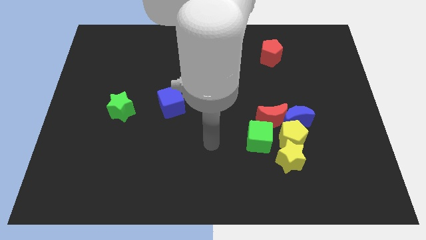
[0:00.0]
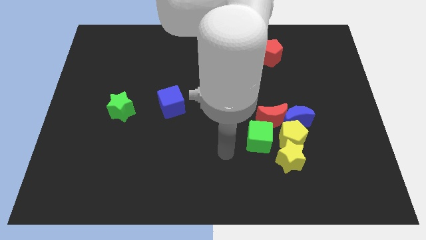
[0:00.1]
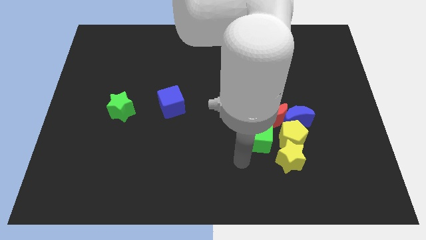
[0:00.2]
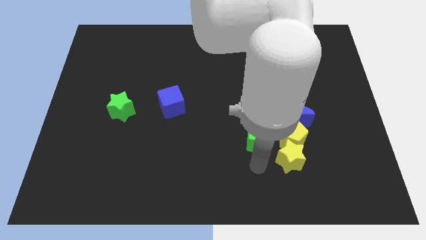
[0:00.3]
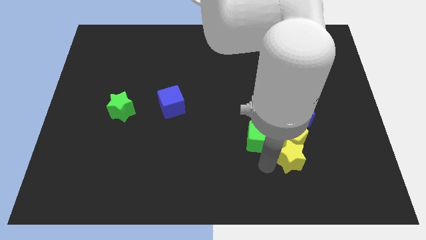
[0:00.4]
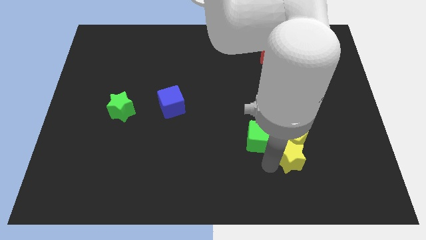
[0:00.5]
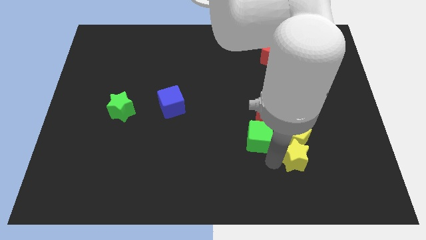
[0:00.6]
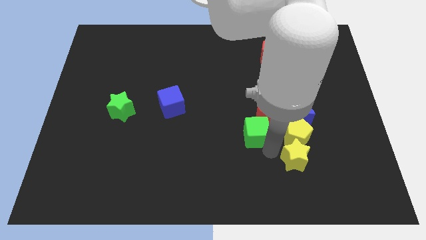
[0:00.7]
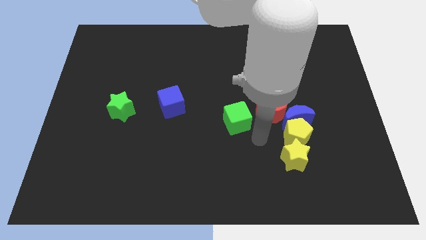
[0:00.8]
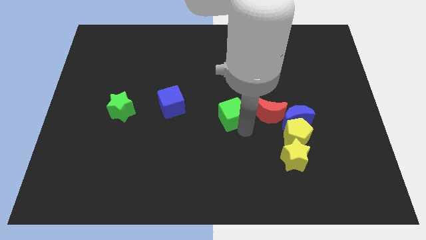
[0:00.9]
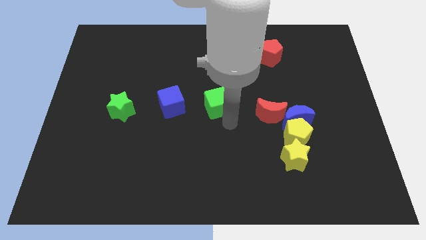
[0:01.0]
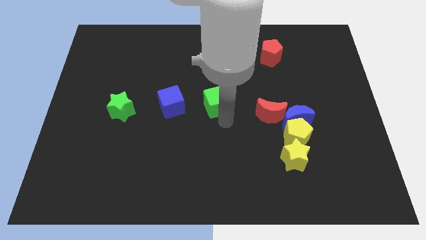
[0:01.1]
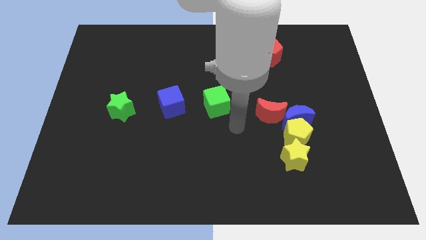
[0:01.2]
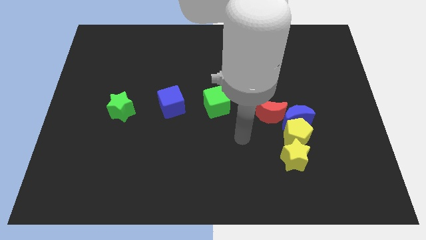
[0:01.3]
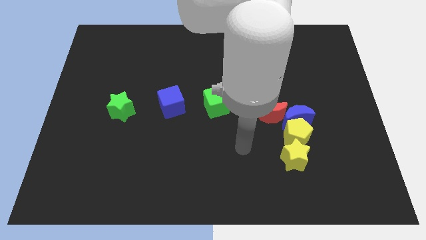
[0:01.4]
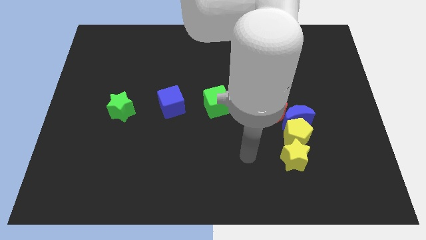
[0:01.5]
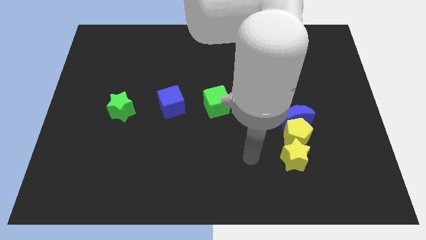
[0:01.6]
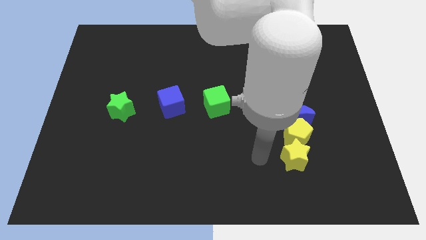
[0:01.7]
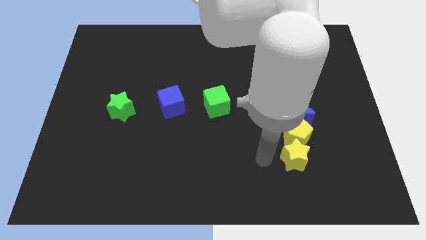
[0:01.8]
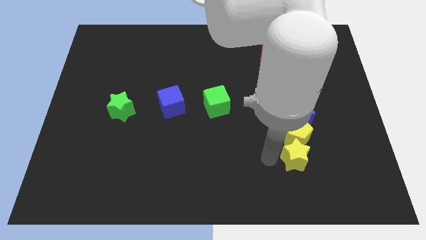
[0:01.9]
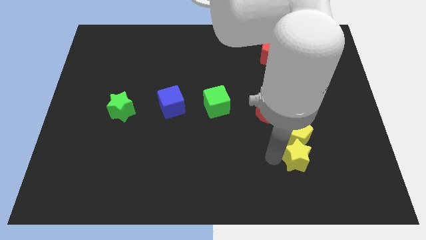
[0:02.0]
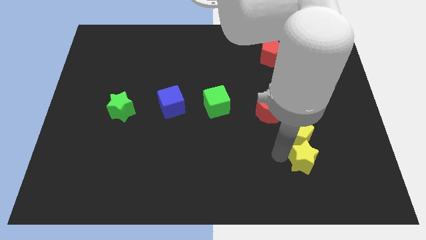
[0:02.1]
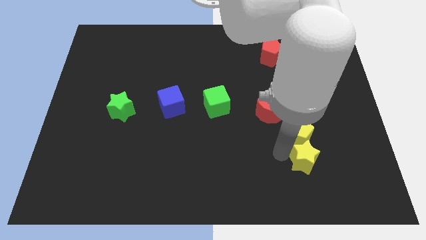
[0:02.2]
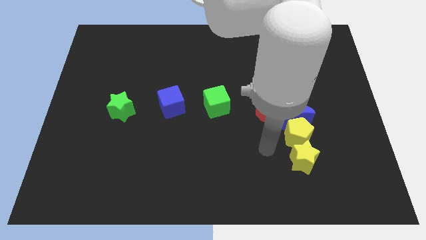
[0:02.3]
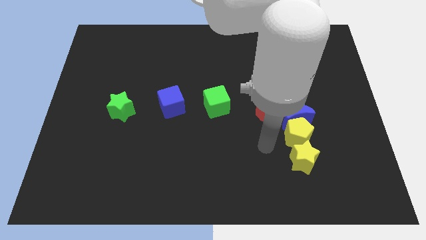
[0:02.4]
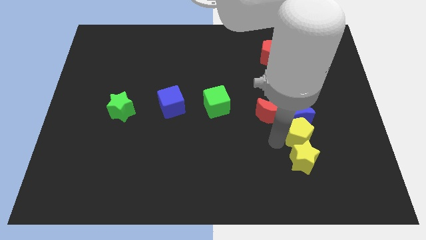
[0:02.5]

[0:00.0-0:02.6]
place the green cube diagonally bottom right of the blue cube

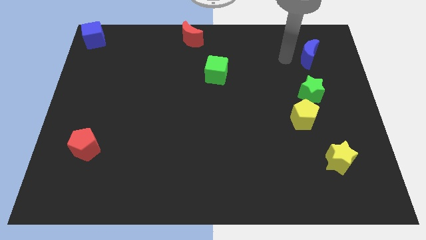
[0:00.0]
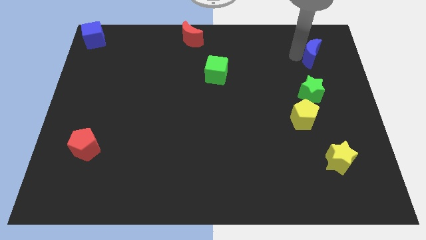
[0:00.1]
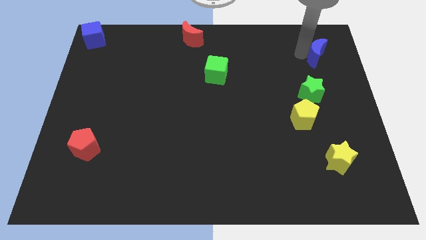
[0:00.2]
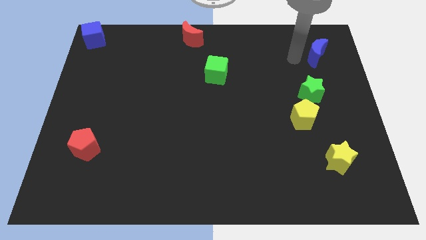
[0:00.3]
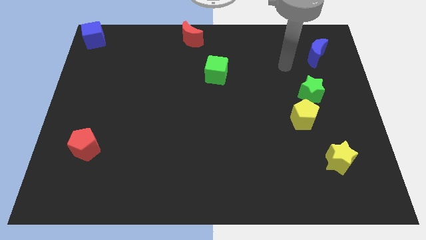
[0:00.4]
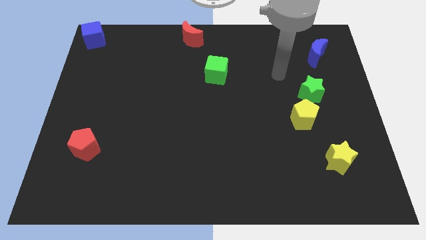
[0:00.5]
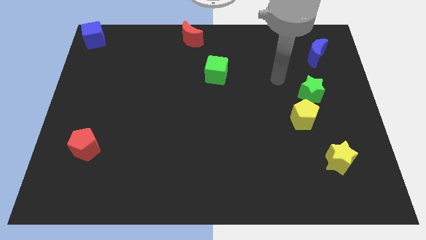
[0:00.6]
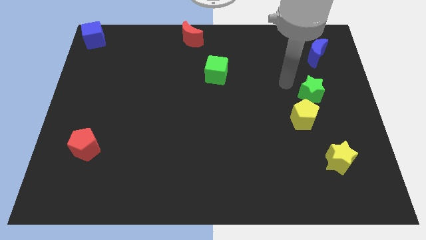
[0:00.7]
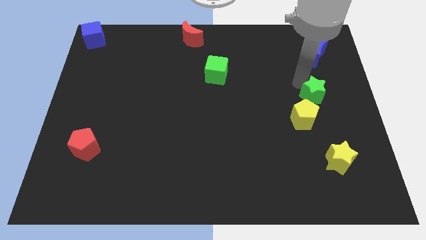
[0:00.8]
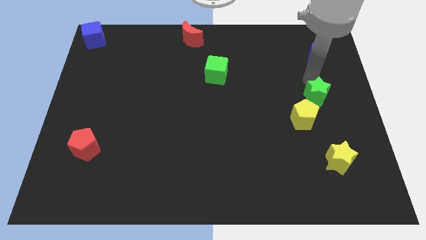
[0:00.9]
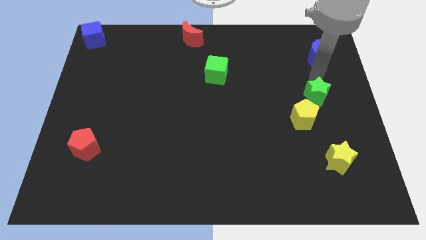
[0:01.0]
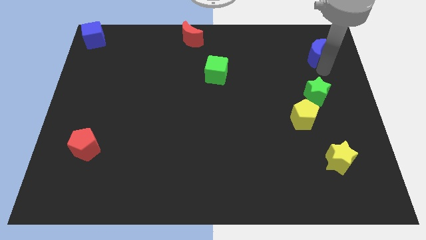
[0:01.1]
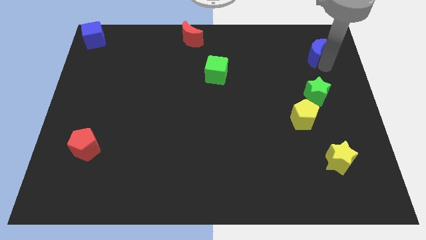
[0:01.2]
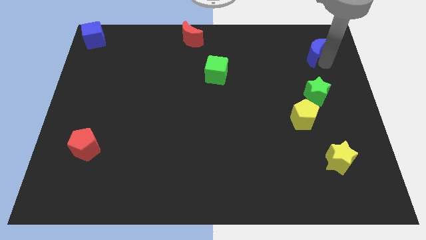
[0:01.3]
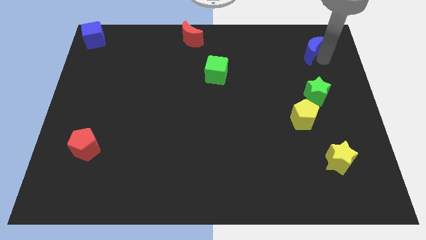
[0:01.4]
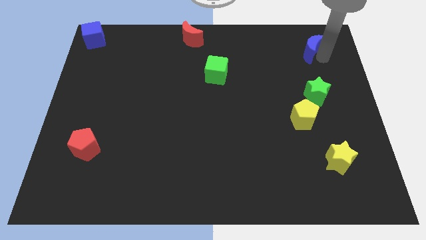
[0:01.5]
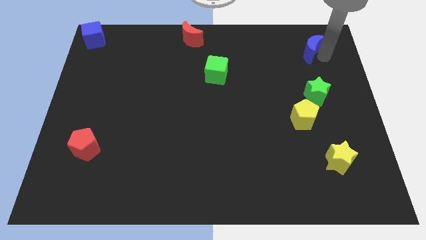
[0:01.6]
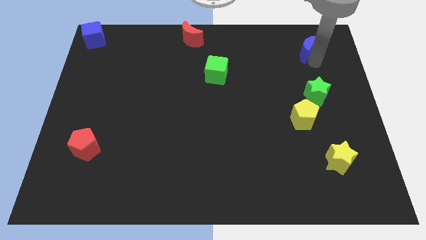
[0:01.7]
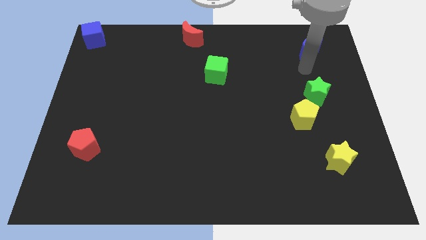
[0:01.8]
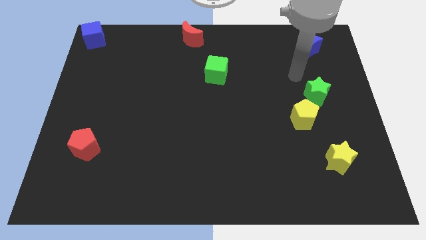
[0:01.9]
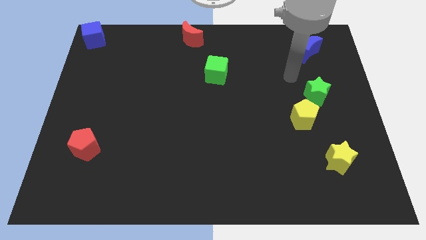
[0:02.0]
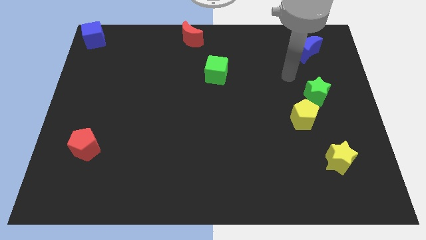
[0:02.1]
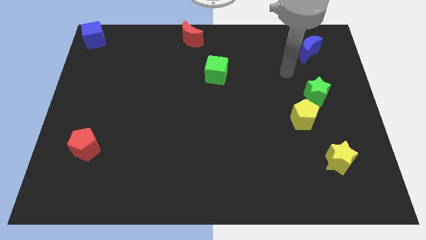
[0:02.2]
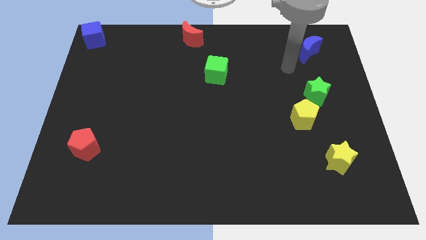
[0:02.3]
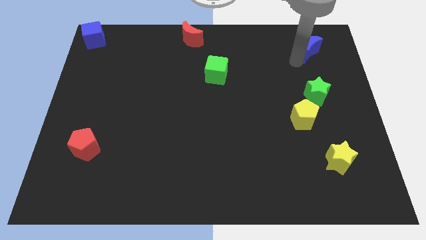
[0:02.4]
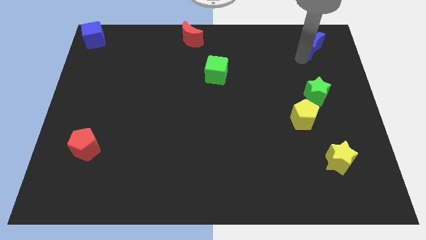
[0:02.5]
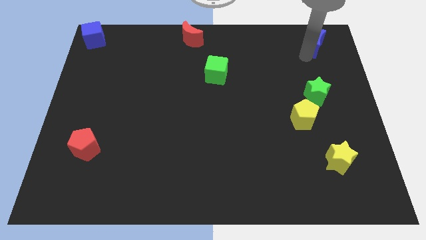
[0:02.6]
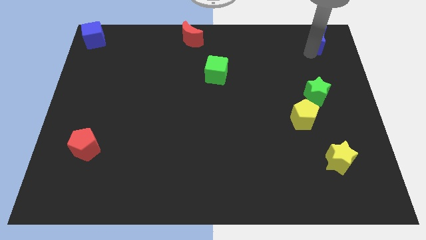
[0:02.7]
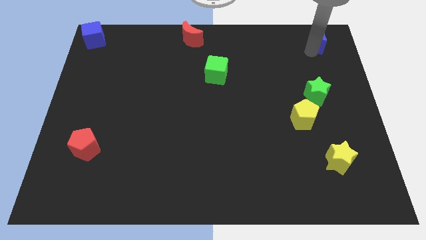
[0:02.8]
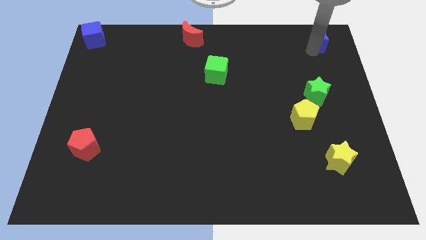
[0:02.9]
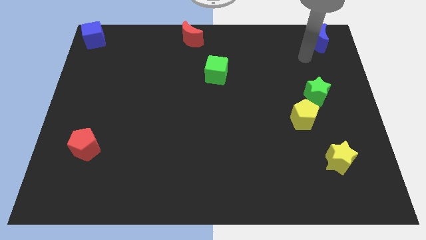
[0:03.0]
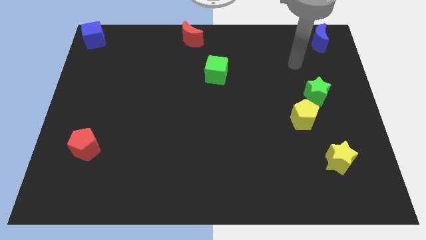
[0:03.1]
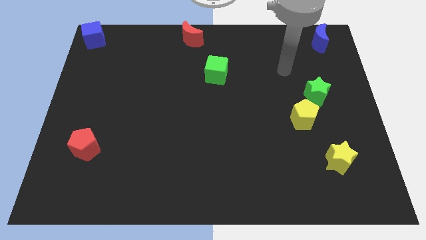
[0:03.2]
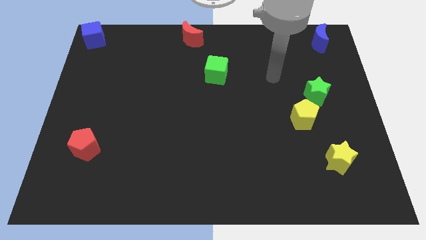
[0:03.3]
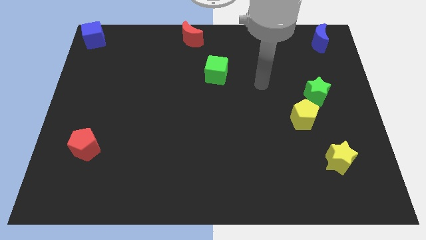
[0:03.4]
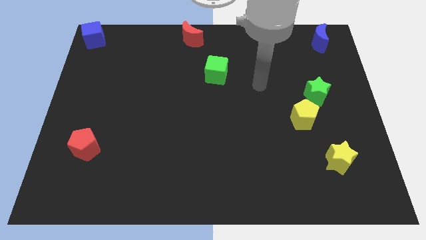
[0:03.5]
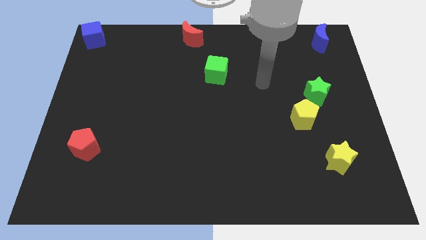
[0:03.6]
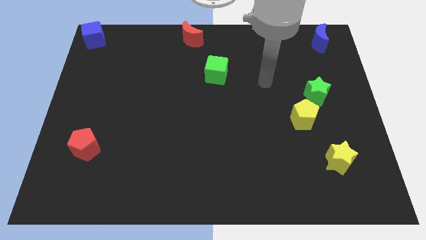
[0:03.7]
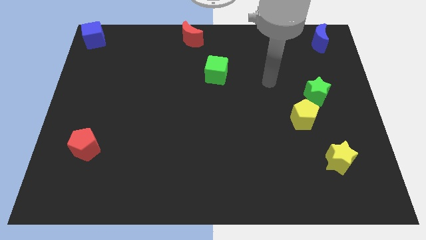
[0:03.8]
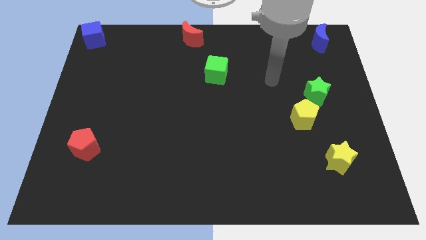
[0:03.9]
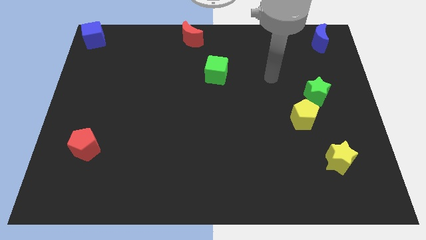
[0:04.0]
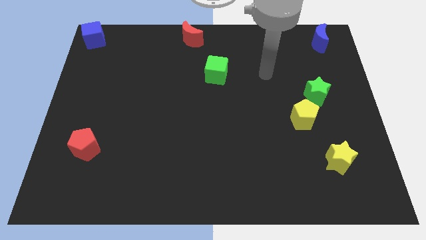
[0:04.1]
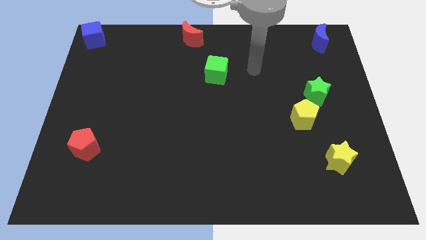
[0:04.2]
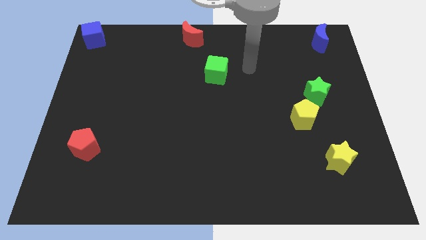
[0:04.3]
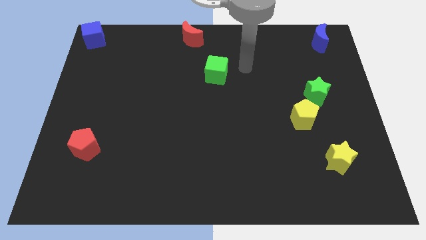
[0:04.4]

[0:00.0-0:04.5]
slide the blue moon towards the top right of the board

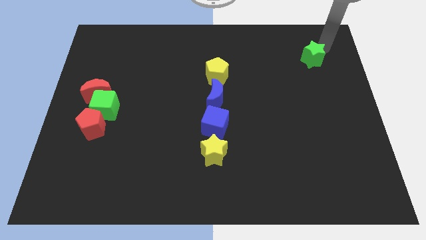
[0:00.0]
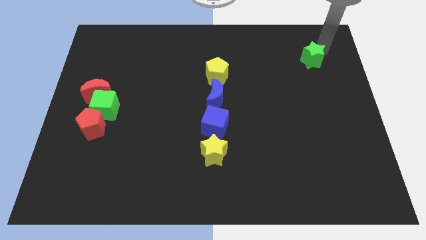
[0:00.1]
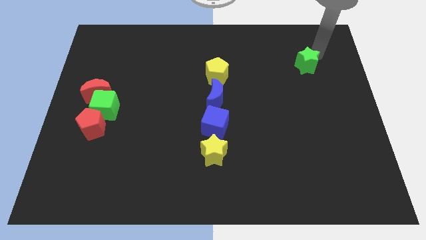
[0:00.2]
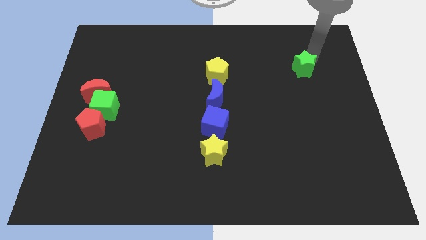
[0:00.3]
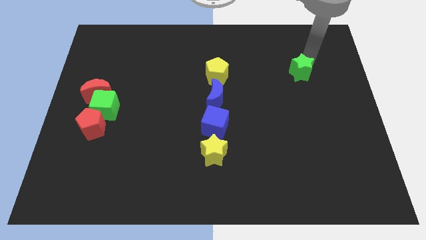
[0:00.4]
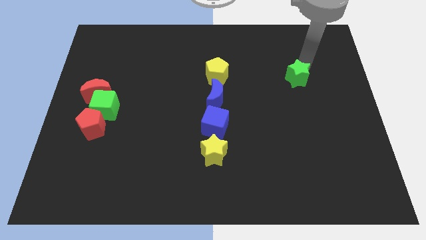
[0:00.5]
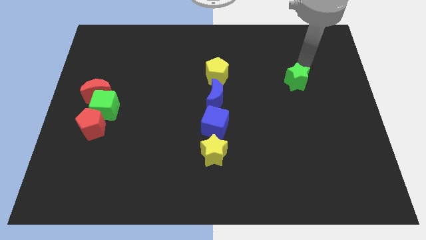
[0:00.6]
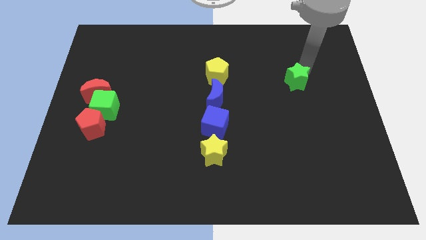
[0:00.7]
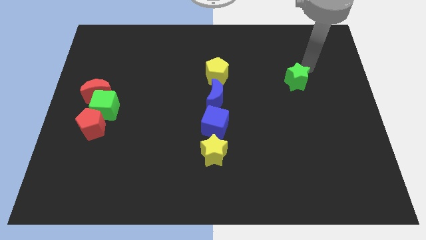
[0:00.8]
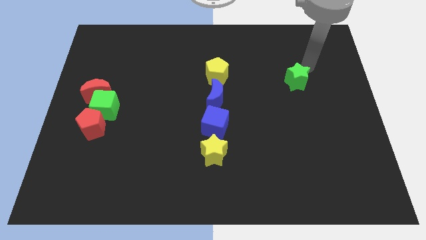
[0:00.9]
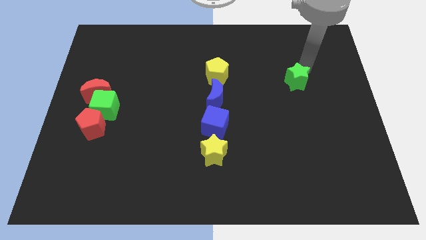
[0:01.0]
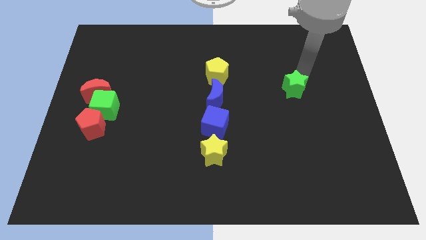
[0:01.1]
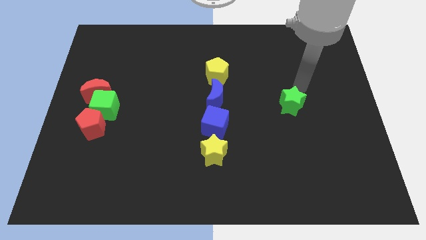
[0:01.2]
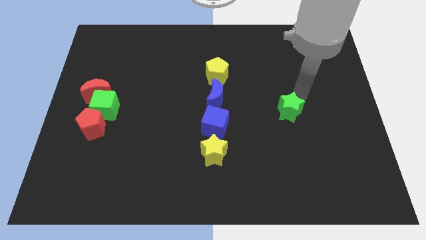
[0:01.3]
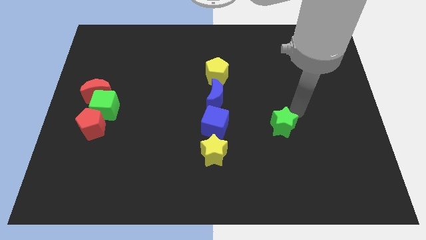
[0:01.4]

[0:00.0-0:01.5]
push the green star to the right of the blue cube

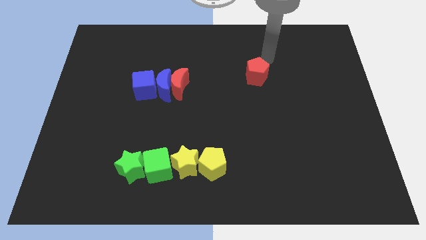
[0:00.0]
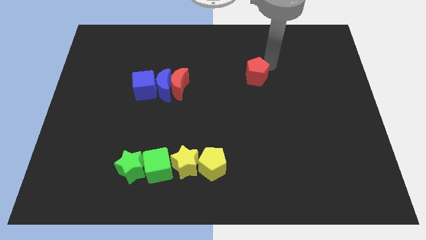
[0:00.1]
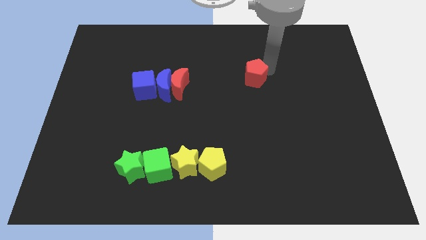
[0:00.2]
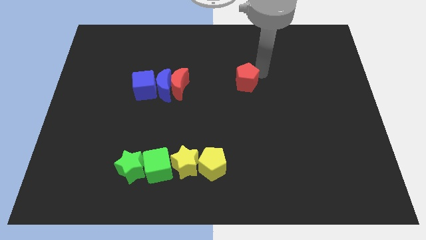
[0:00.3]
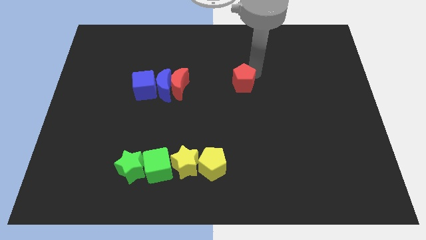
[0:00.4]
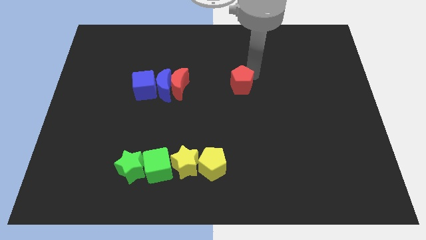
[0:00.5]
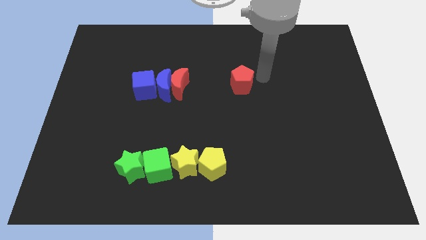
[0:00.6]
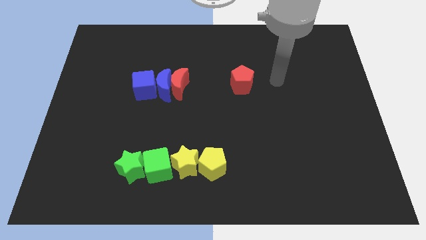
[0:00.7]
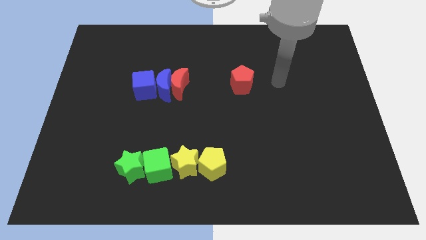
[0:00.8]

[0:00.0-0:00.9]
push red moon towards its left
